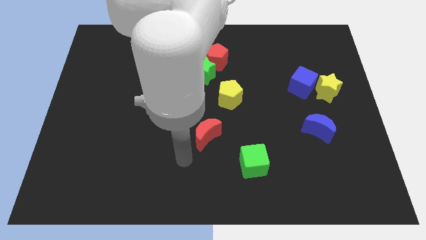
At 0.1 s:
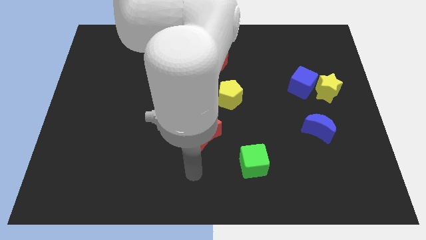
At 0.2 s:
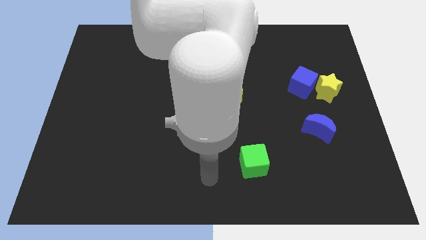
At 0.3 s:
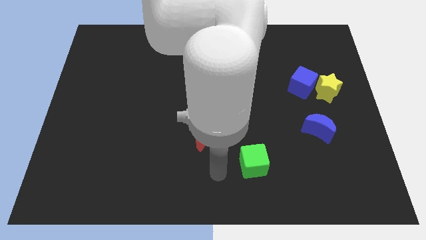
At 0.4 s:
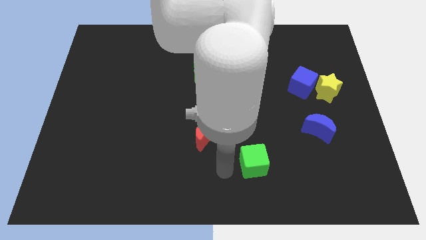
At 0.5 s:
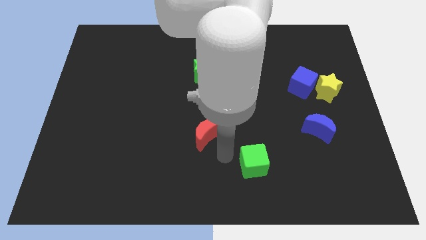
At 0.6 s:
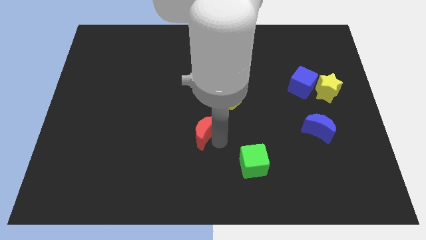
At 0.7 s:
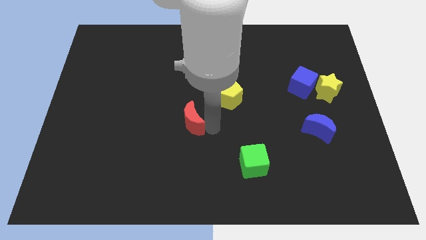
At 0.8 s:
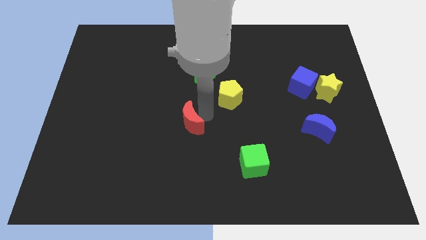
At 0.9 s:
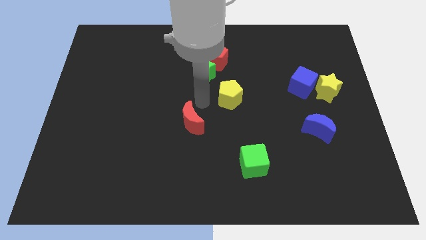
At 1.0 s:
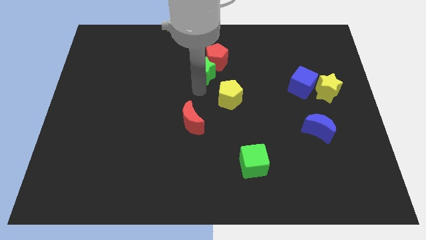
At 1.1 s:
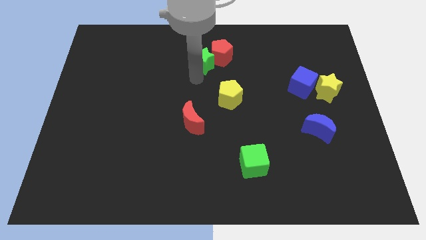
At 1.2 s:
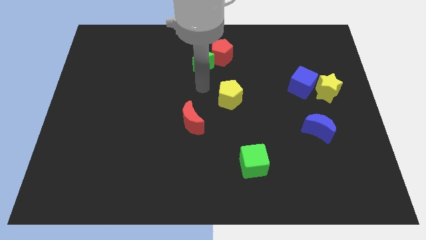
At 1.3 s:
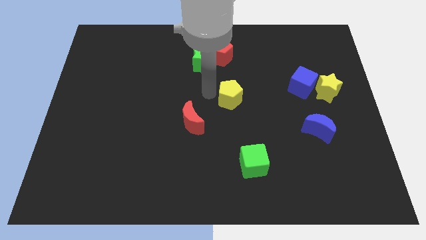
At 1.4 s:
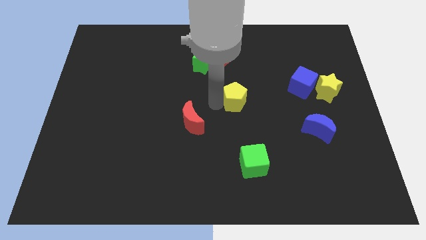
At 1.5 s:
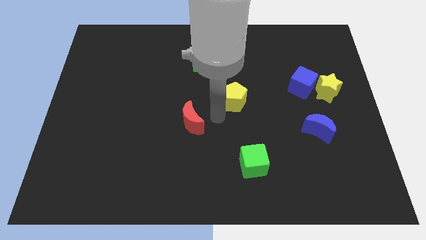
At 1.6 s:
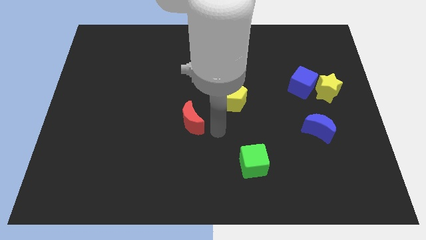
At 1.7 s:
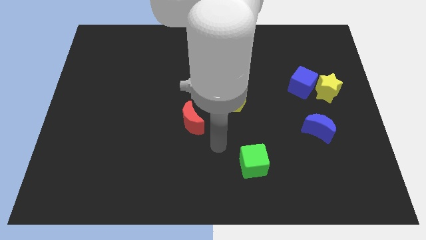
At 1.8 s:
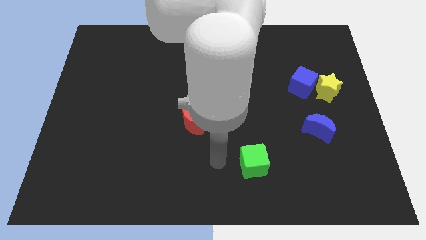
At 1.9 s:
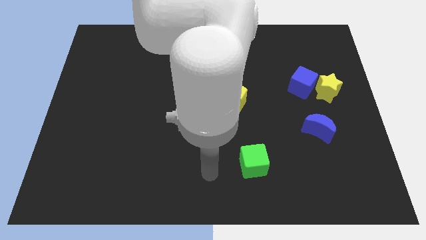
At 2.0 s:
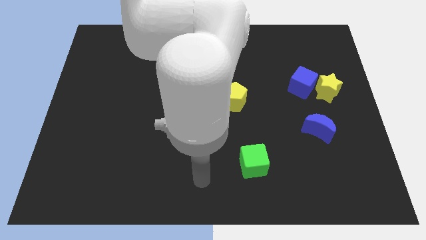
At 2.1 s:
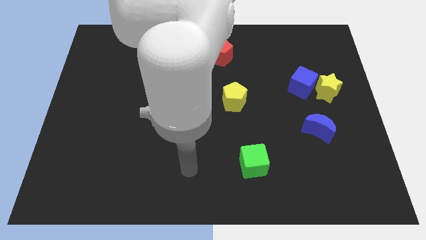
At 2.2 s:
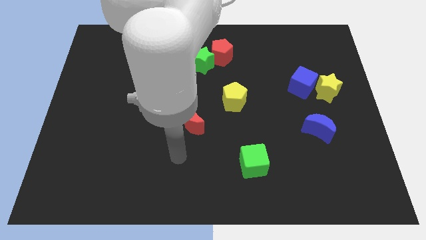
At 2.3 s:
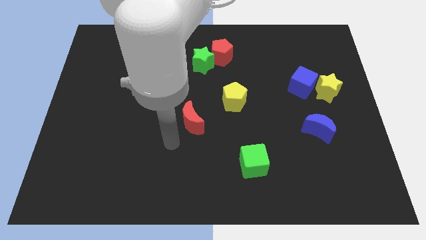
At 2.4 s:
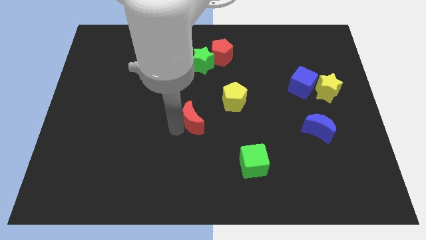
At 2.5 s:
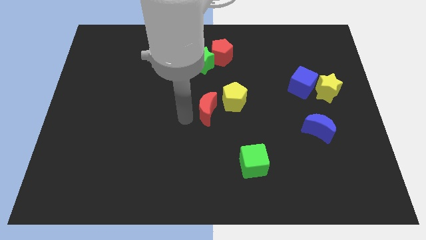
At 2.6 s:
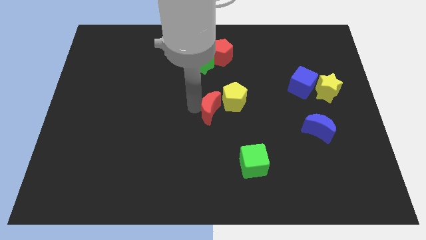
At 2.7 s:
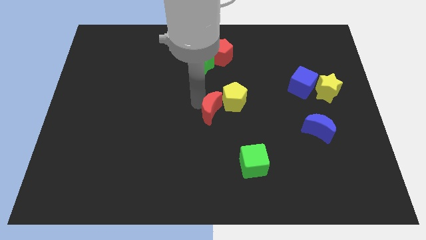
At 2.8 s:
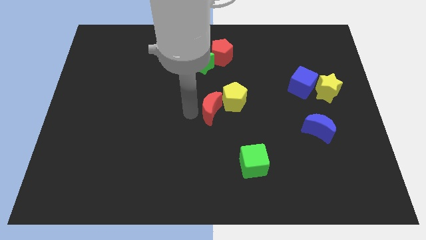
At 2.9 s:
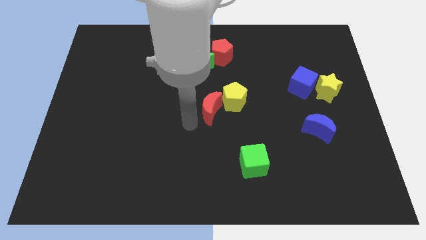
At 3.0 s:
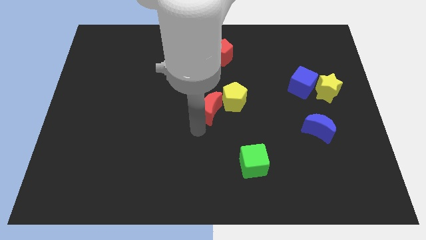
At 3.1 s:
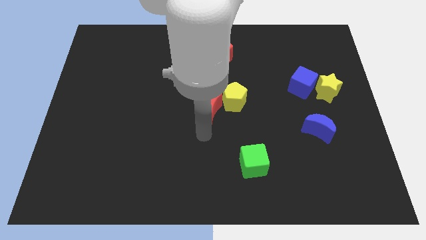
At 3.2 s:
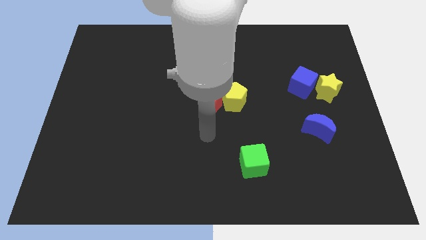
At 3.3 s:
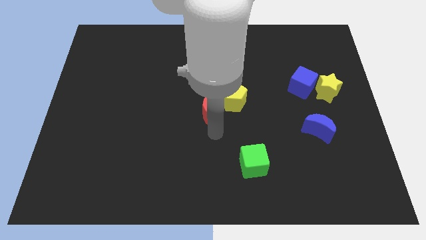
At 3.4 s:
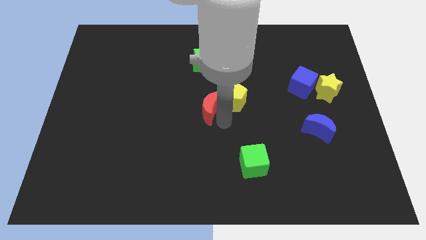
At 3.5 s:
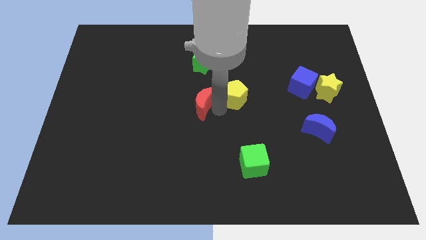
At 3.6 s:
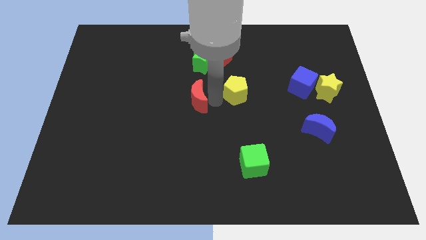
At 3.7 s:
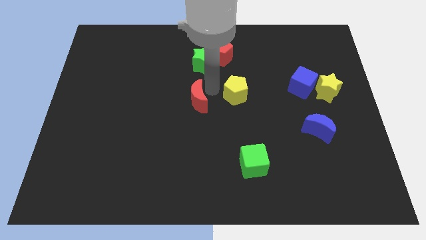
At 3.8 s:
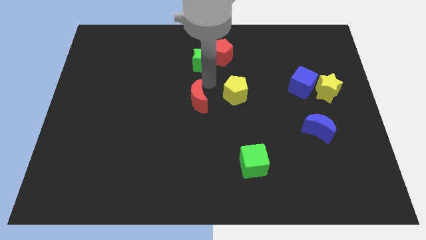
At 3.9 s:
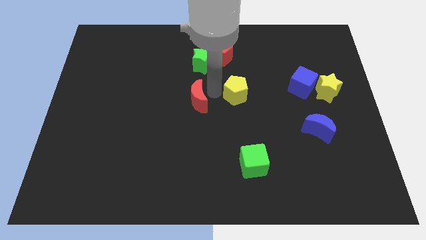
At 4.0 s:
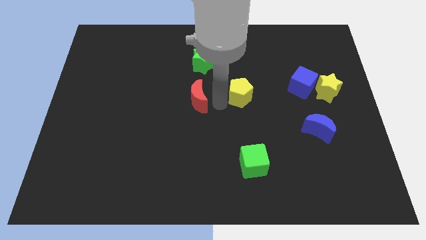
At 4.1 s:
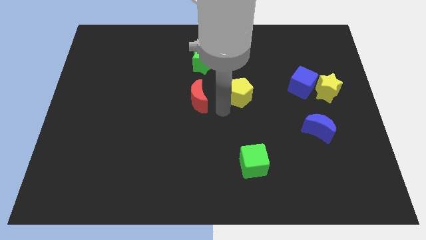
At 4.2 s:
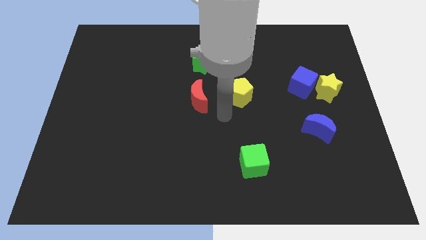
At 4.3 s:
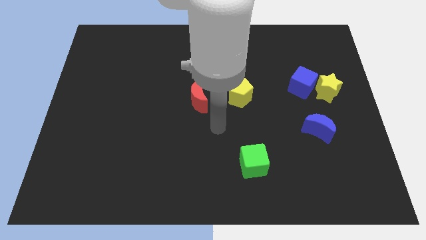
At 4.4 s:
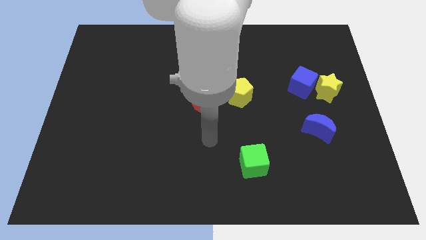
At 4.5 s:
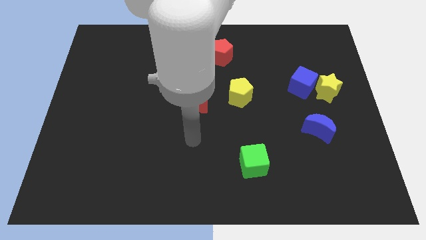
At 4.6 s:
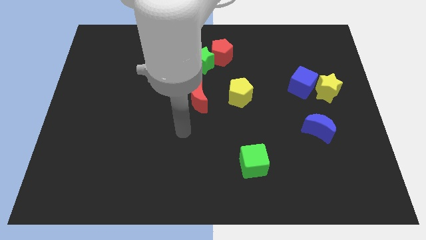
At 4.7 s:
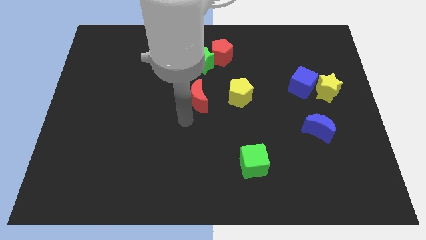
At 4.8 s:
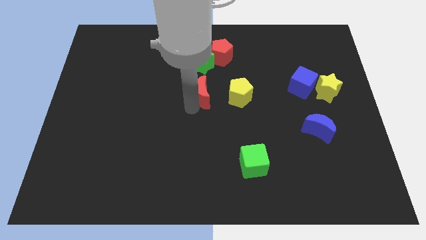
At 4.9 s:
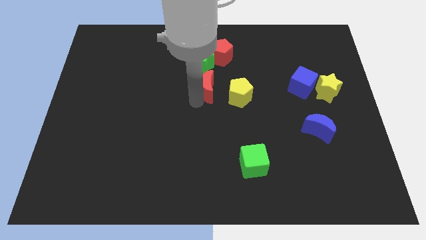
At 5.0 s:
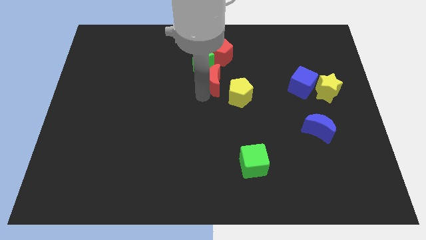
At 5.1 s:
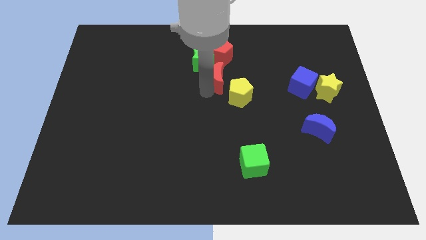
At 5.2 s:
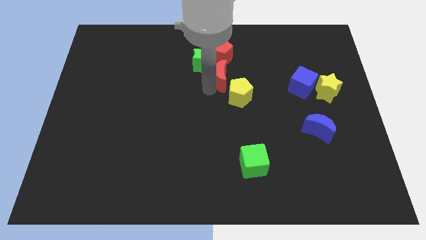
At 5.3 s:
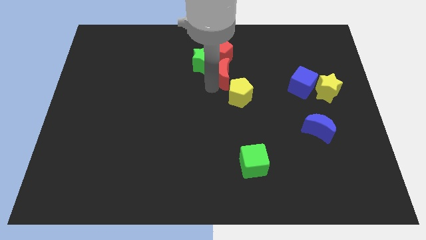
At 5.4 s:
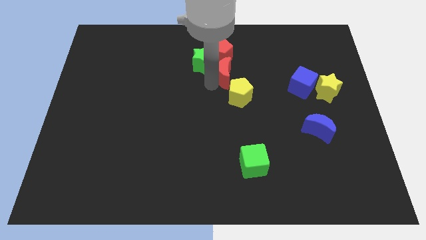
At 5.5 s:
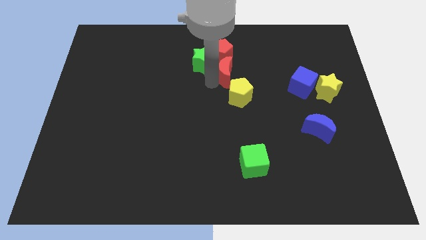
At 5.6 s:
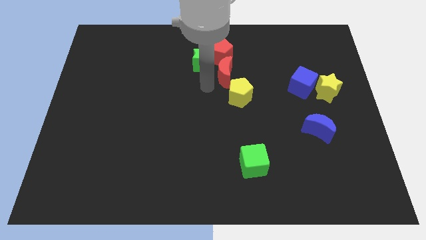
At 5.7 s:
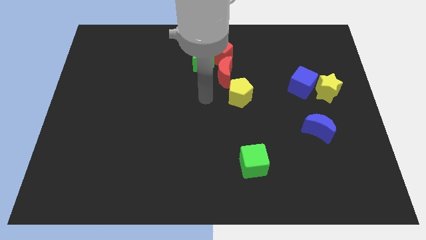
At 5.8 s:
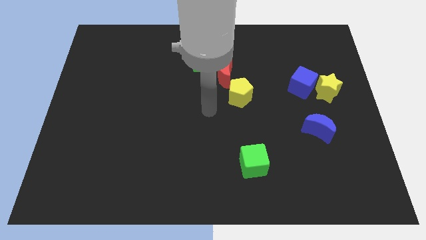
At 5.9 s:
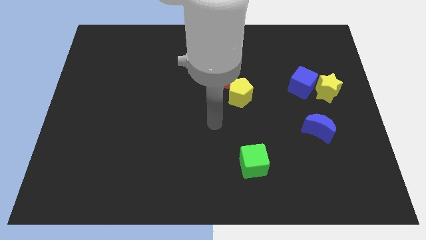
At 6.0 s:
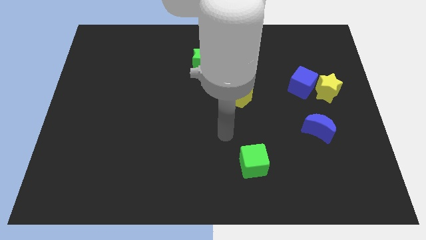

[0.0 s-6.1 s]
push the red crescent to the bottom of the red pentagon

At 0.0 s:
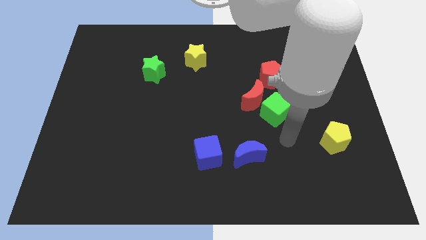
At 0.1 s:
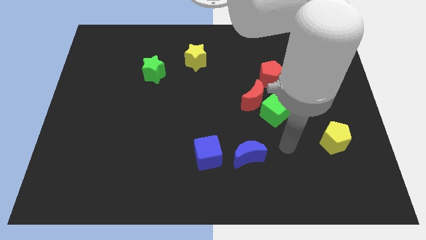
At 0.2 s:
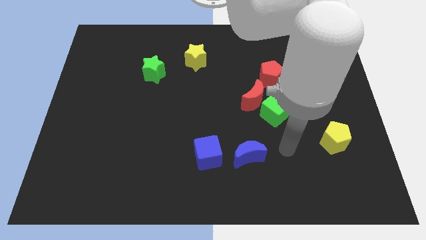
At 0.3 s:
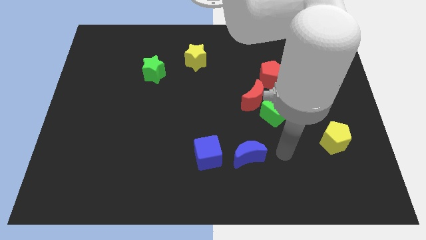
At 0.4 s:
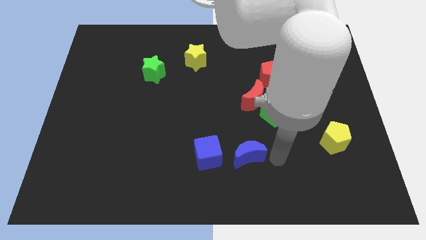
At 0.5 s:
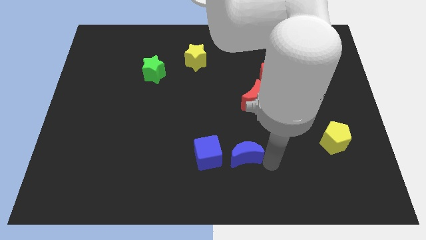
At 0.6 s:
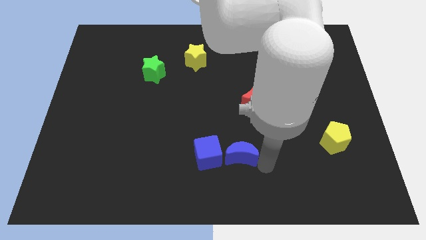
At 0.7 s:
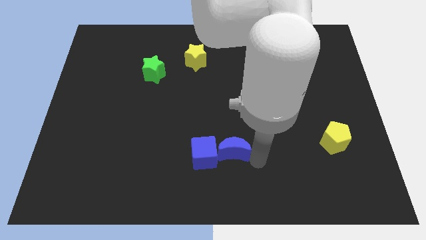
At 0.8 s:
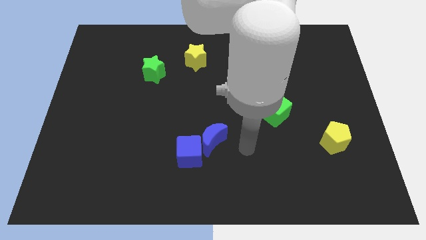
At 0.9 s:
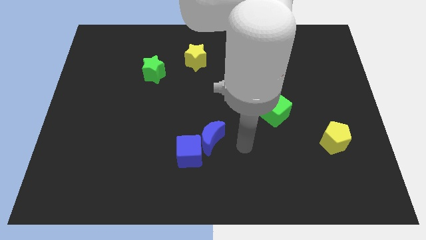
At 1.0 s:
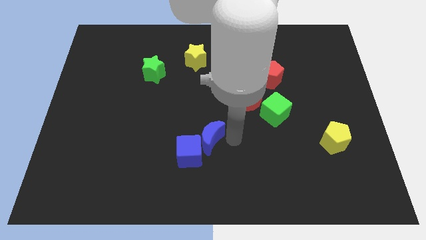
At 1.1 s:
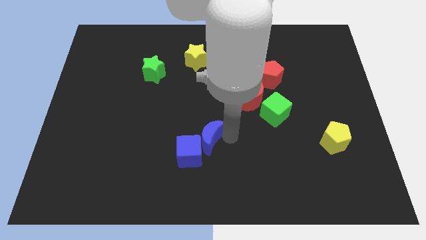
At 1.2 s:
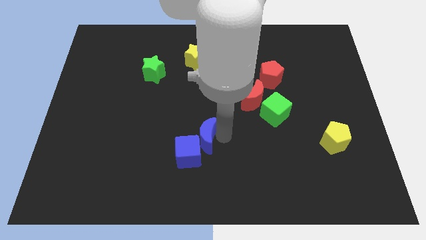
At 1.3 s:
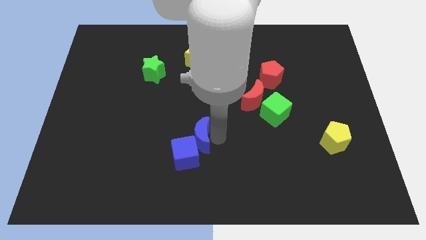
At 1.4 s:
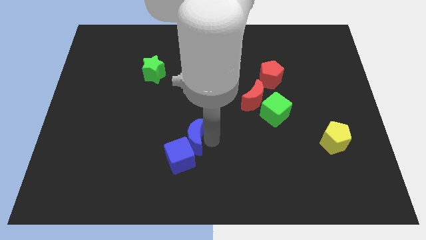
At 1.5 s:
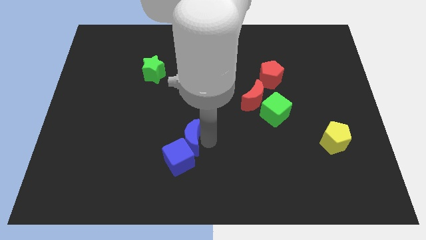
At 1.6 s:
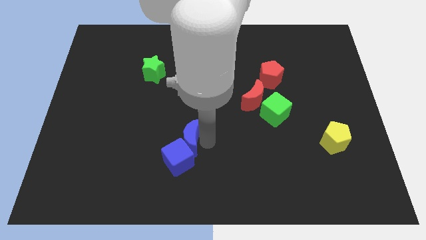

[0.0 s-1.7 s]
move the blue crescent to the right of the blue cube

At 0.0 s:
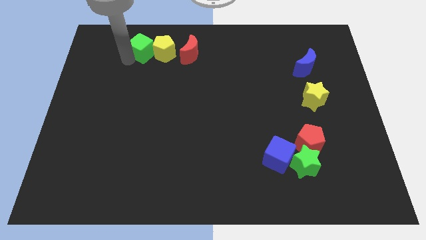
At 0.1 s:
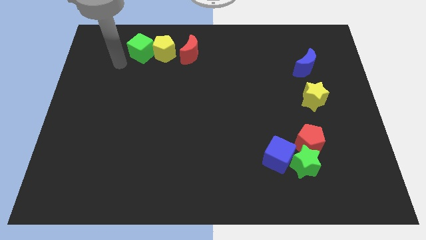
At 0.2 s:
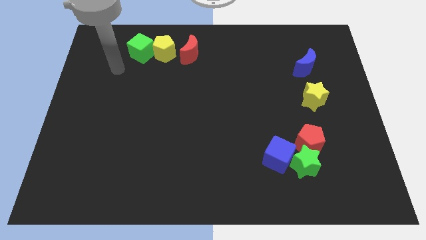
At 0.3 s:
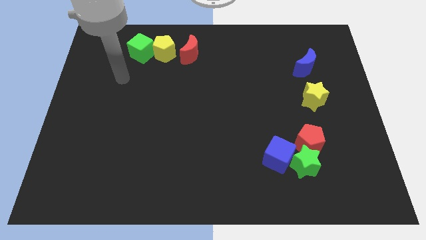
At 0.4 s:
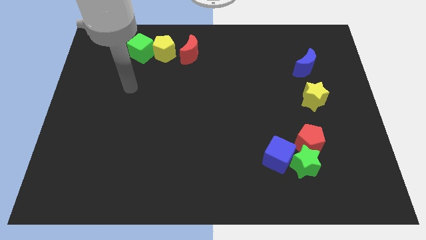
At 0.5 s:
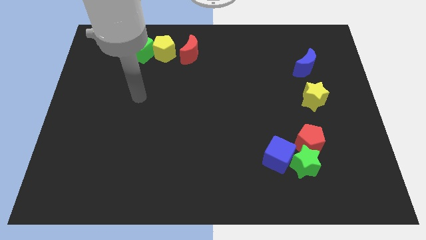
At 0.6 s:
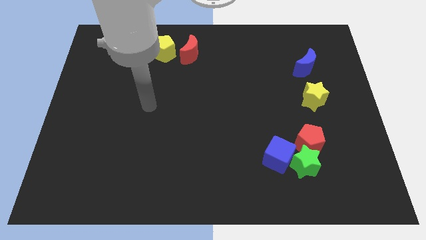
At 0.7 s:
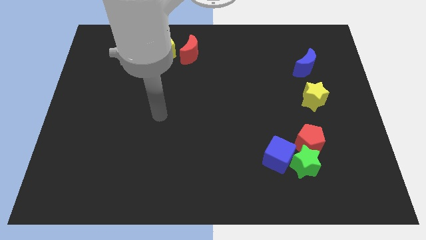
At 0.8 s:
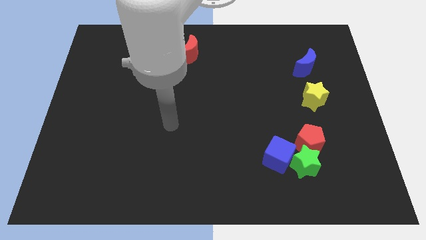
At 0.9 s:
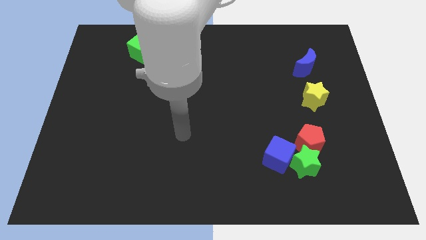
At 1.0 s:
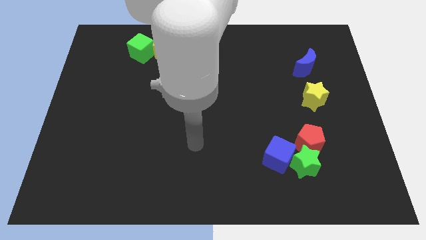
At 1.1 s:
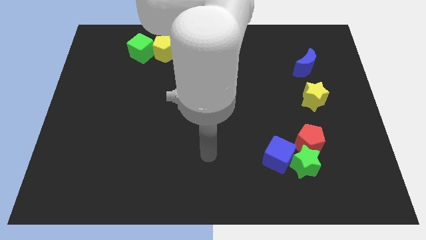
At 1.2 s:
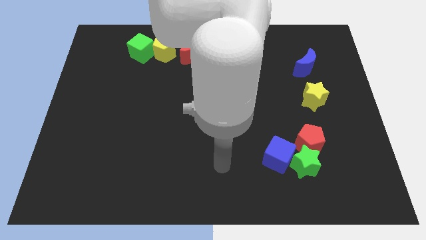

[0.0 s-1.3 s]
move your arm away from green cube
